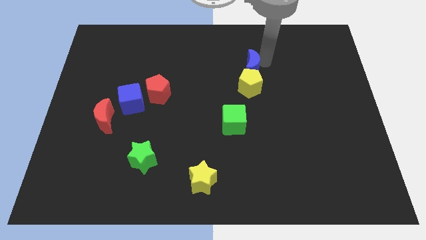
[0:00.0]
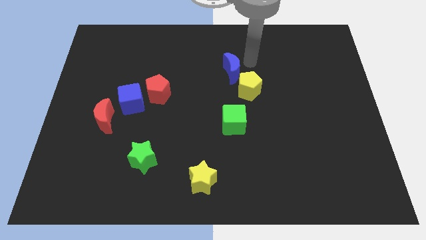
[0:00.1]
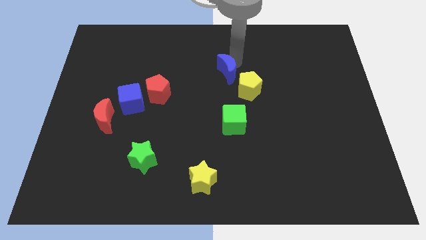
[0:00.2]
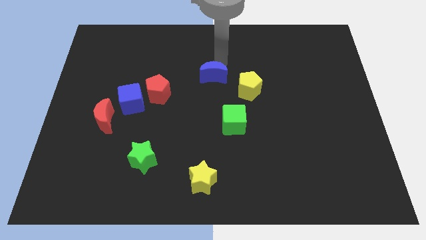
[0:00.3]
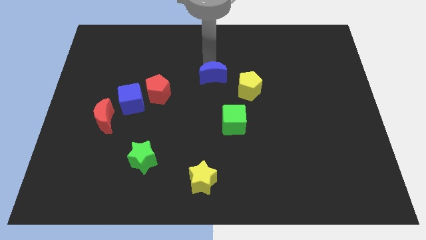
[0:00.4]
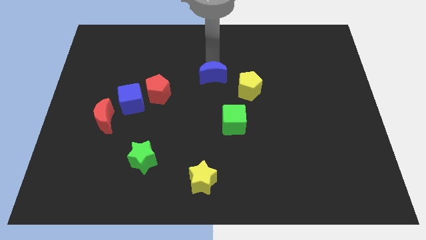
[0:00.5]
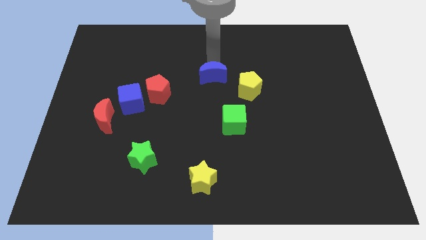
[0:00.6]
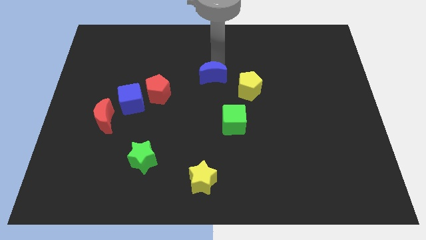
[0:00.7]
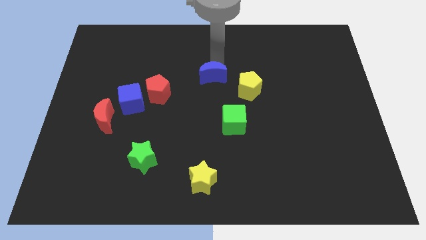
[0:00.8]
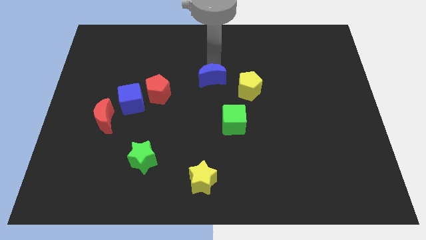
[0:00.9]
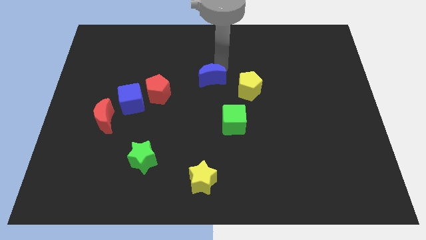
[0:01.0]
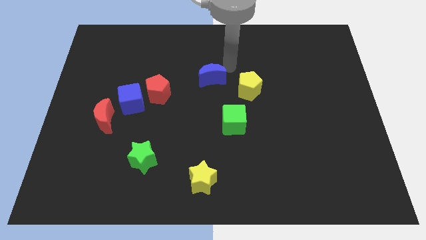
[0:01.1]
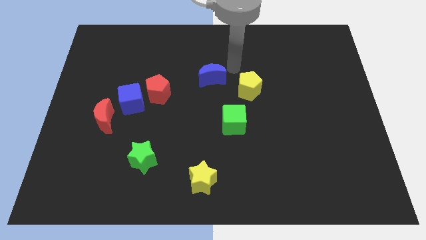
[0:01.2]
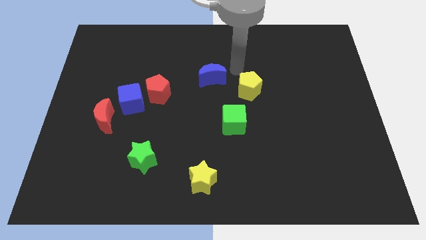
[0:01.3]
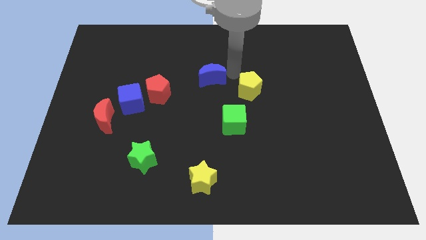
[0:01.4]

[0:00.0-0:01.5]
place the blue crescent to the left of the yellow pentagon

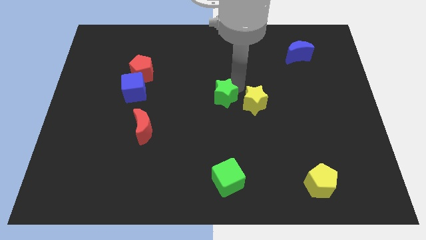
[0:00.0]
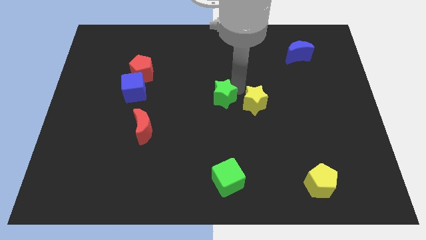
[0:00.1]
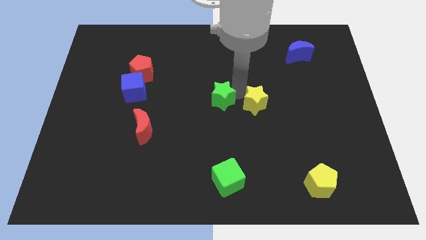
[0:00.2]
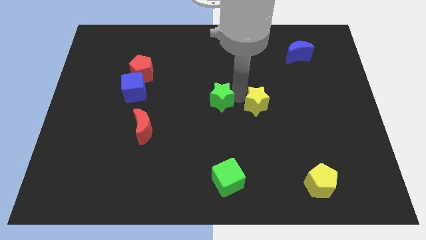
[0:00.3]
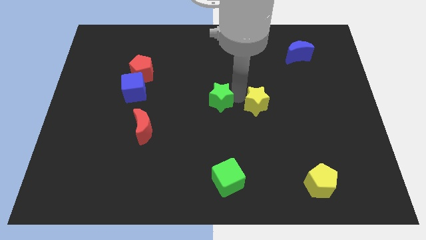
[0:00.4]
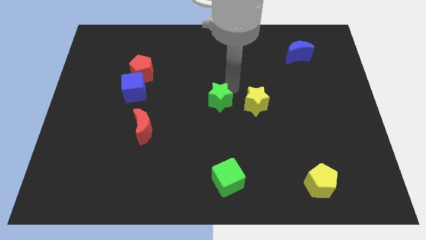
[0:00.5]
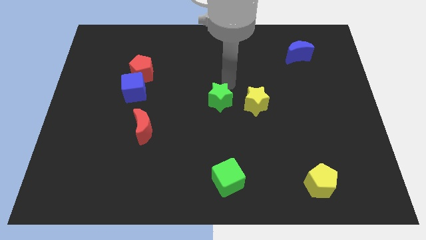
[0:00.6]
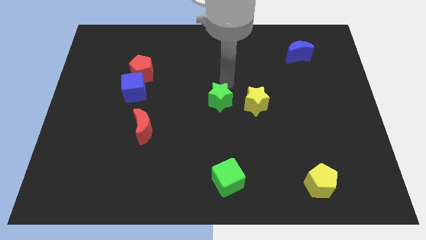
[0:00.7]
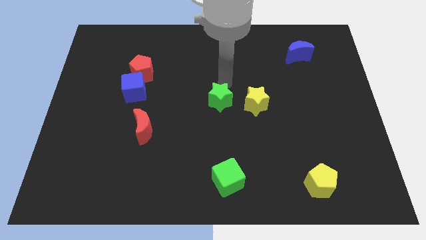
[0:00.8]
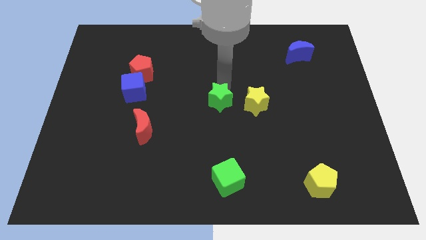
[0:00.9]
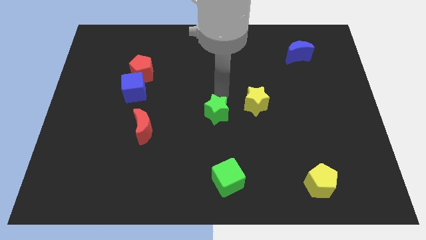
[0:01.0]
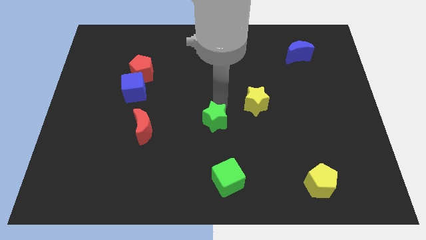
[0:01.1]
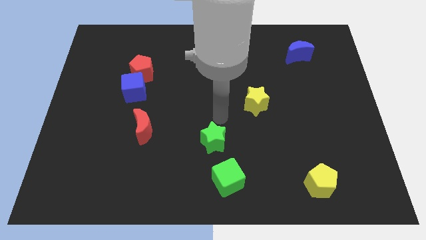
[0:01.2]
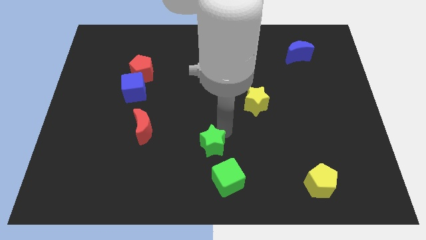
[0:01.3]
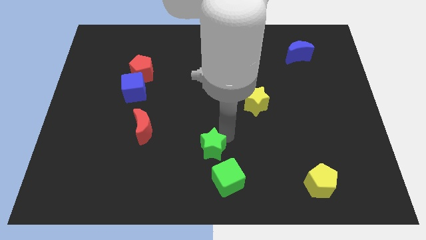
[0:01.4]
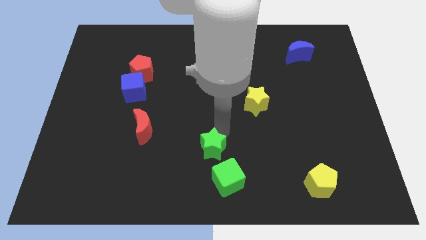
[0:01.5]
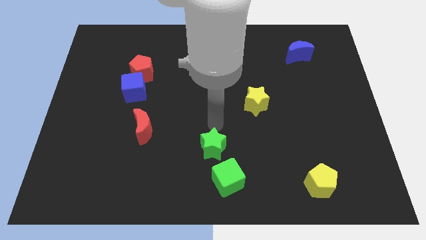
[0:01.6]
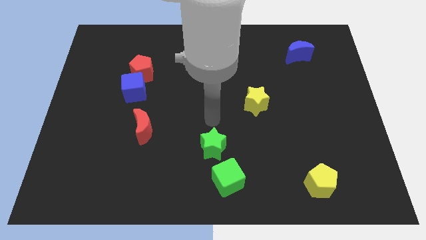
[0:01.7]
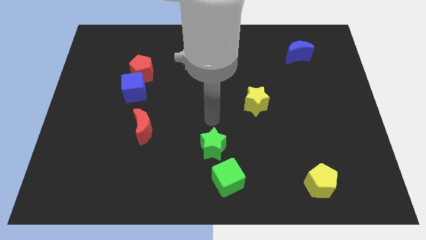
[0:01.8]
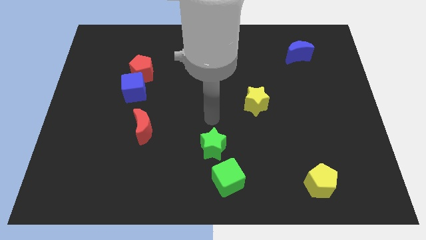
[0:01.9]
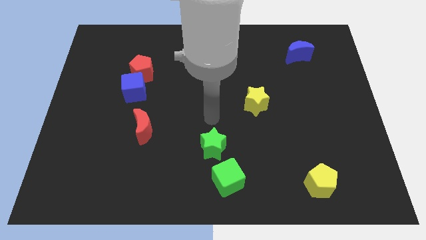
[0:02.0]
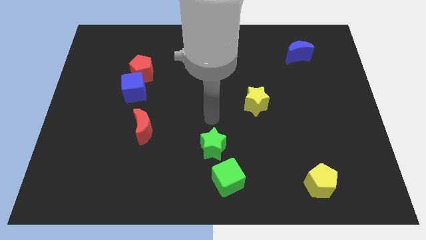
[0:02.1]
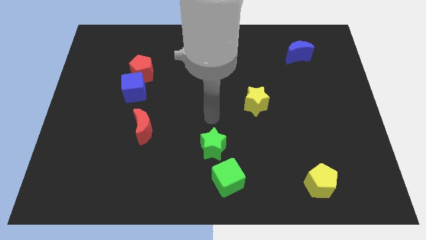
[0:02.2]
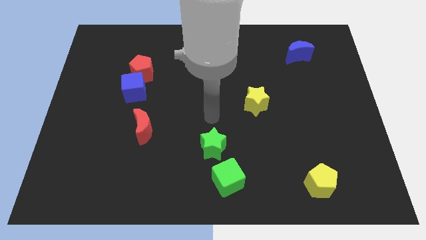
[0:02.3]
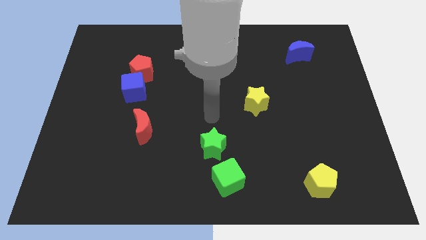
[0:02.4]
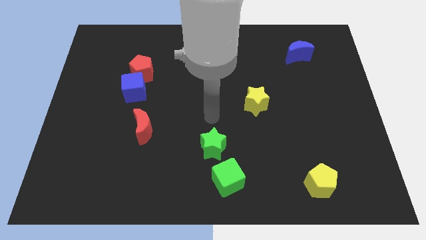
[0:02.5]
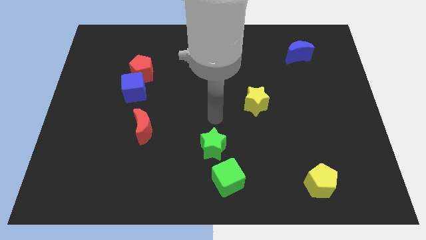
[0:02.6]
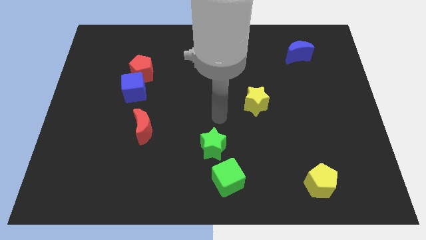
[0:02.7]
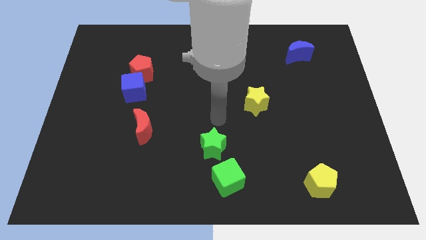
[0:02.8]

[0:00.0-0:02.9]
move green star to the top left of the green cube

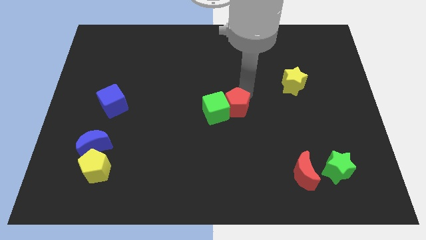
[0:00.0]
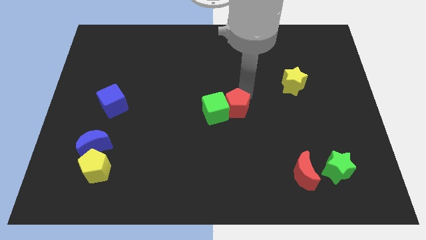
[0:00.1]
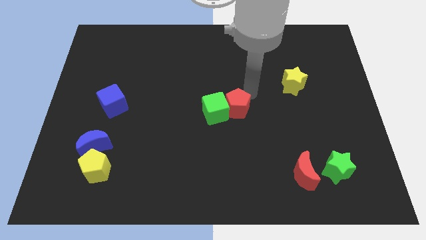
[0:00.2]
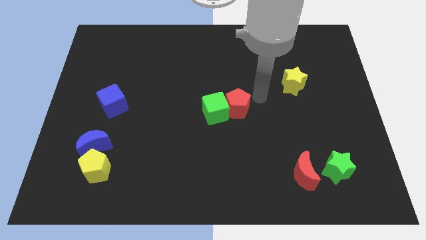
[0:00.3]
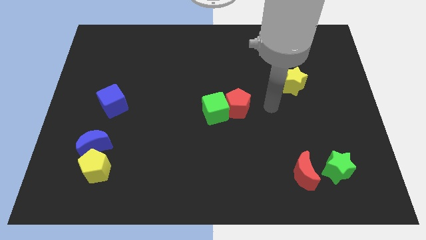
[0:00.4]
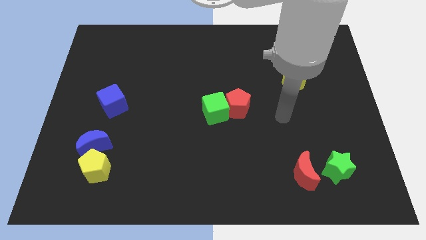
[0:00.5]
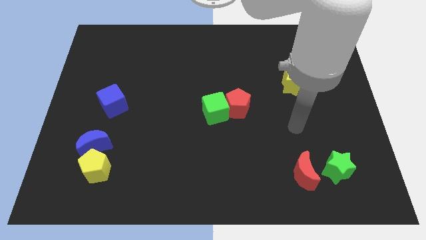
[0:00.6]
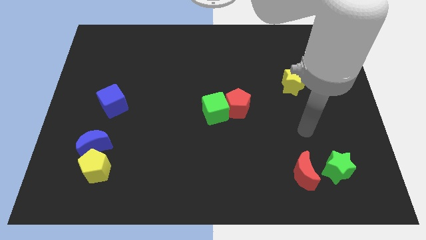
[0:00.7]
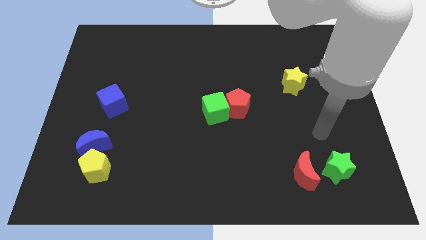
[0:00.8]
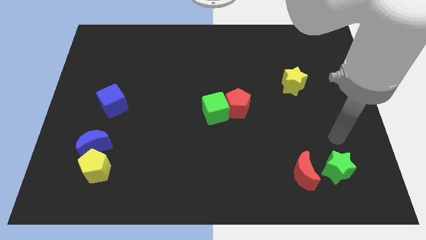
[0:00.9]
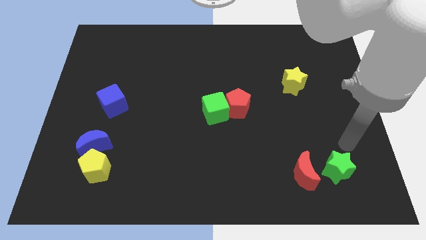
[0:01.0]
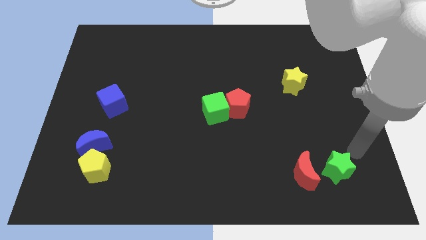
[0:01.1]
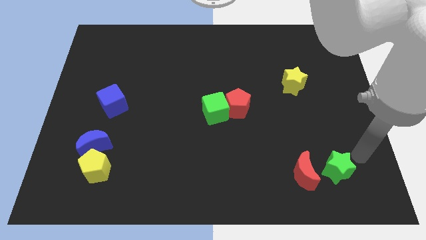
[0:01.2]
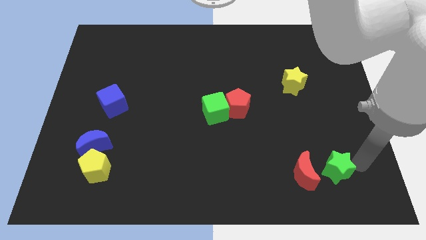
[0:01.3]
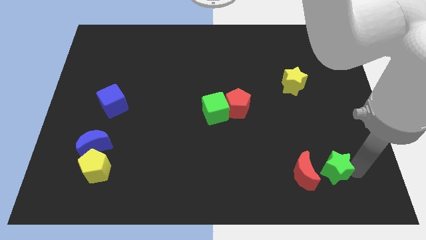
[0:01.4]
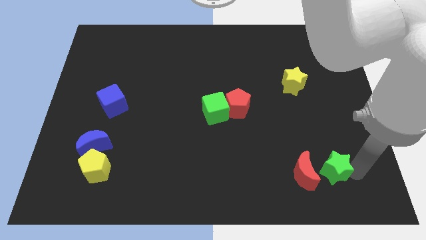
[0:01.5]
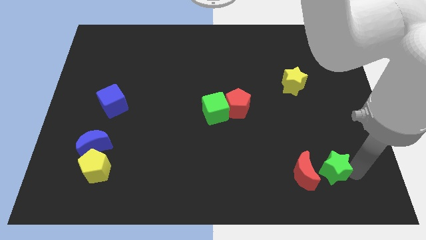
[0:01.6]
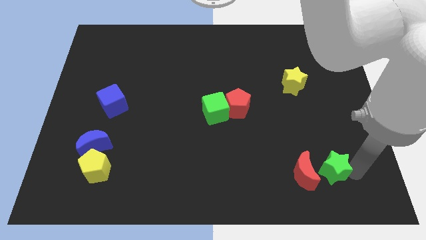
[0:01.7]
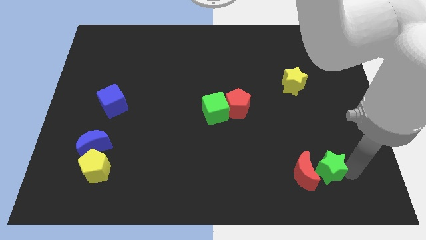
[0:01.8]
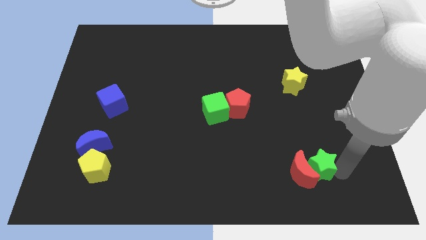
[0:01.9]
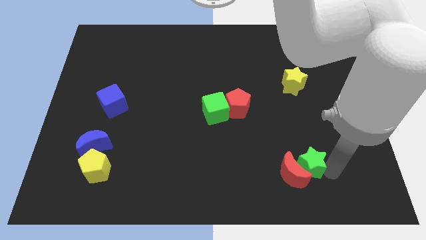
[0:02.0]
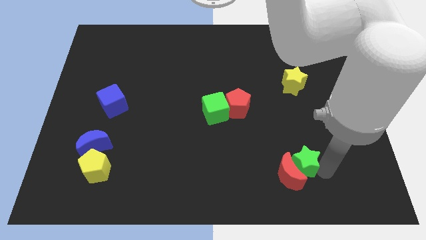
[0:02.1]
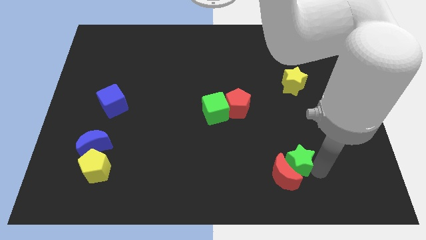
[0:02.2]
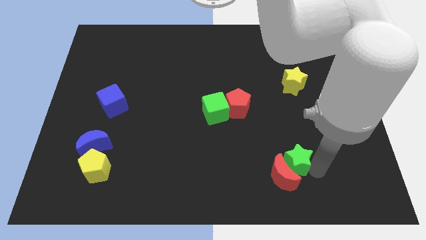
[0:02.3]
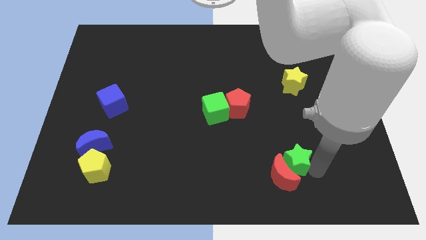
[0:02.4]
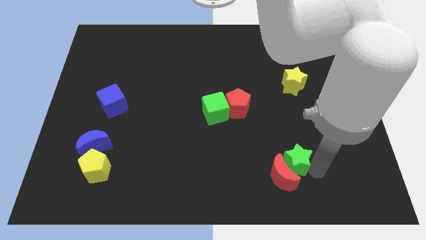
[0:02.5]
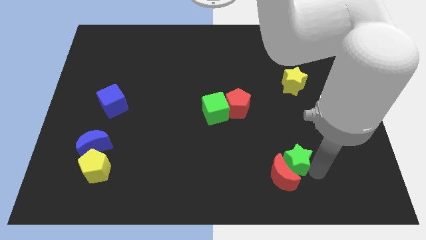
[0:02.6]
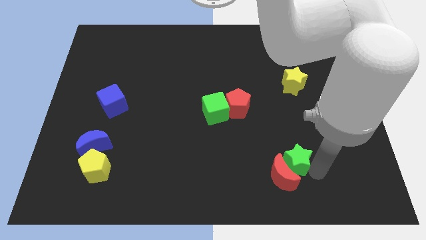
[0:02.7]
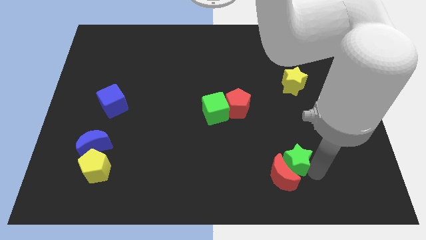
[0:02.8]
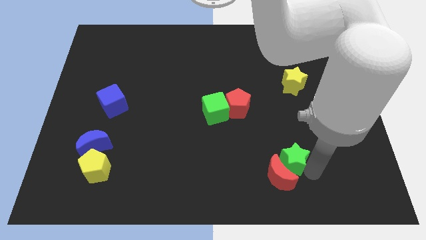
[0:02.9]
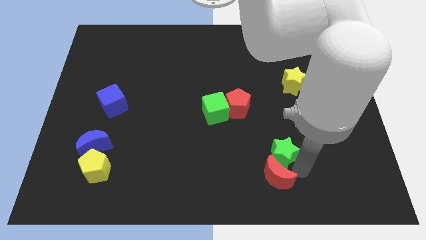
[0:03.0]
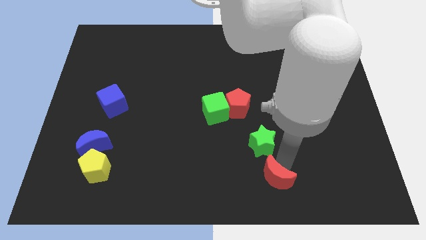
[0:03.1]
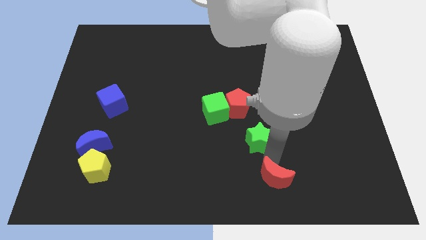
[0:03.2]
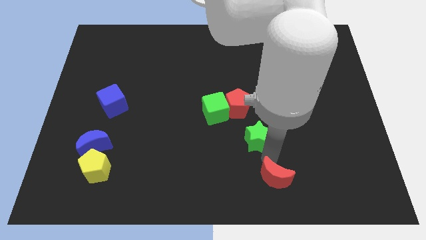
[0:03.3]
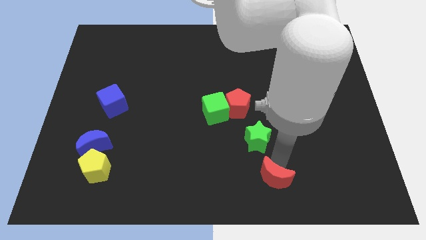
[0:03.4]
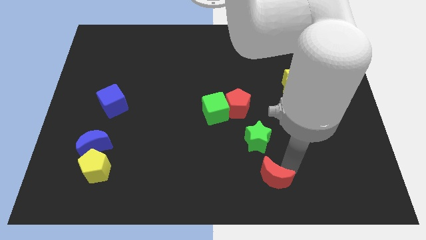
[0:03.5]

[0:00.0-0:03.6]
place green star below red pentagon

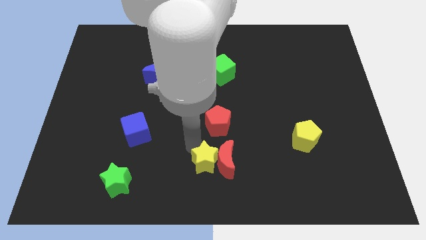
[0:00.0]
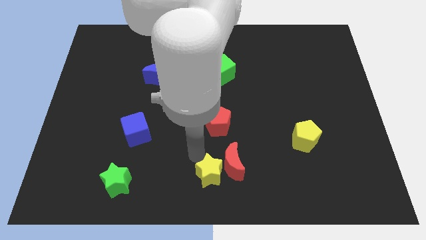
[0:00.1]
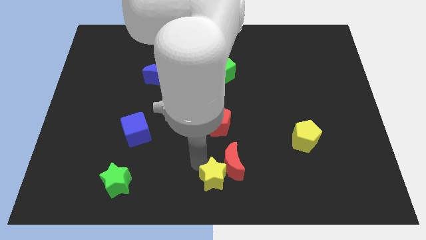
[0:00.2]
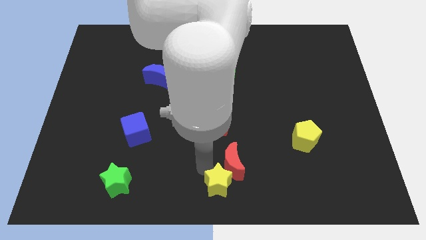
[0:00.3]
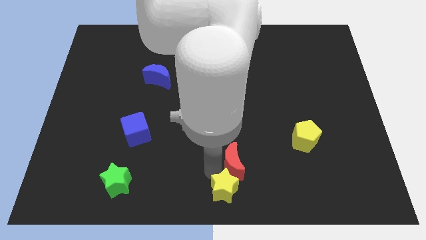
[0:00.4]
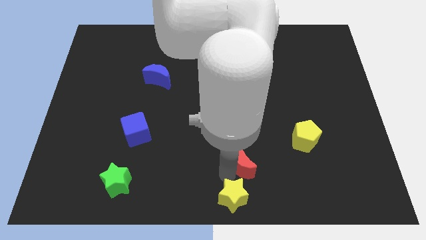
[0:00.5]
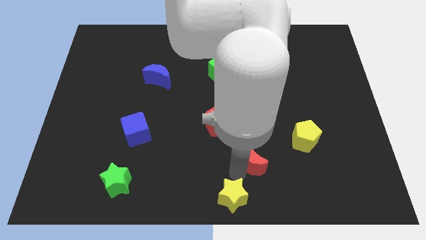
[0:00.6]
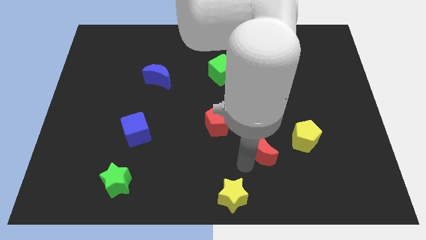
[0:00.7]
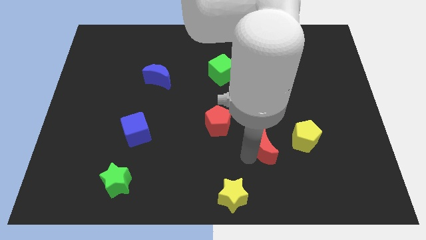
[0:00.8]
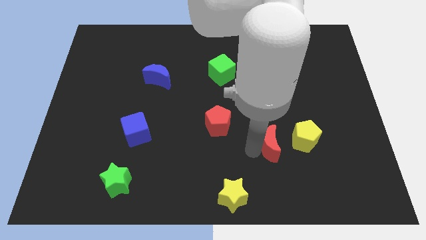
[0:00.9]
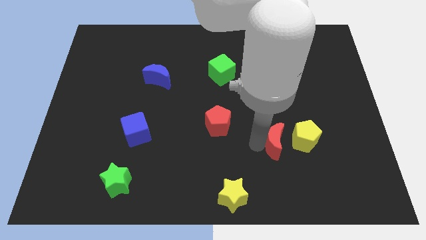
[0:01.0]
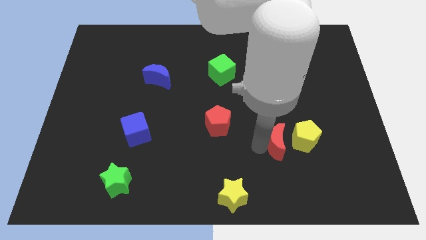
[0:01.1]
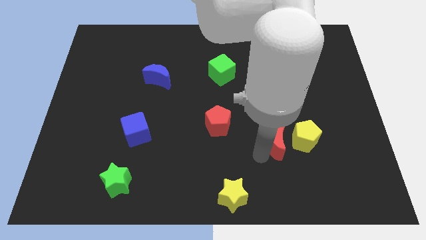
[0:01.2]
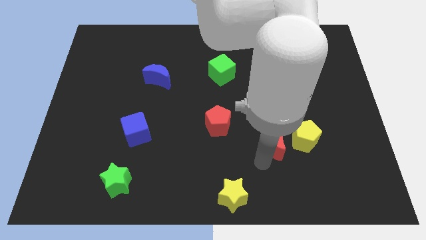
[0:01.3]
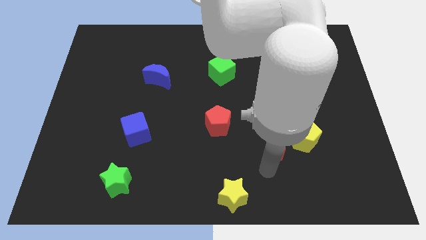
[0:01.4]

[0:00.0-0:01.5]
slide the red moon close to the left side of the yellow pentagon
